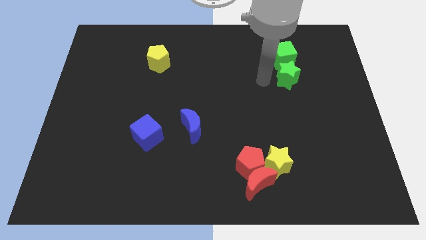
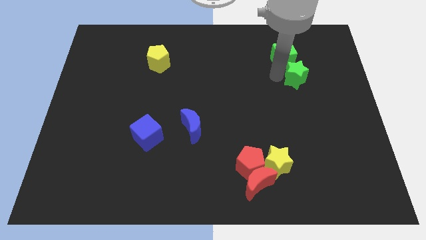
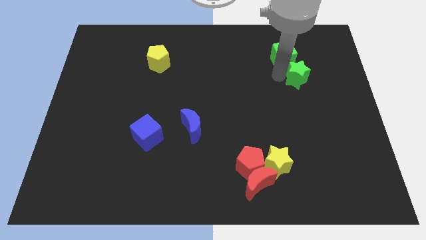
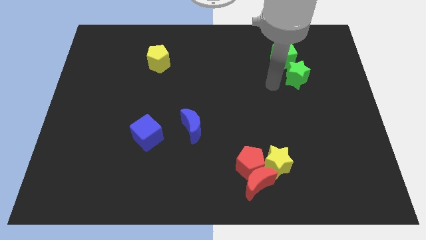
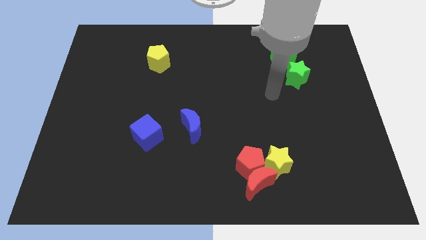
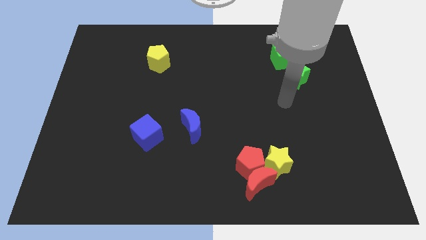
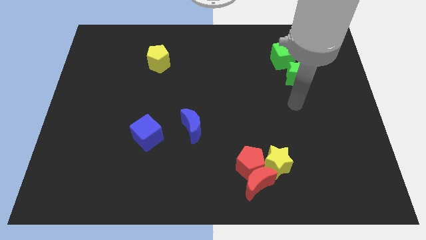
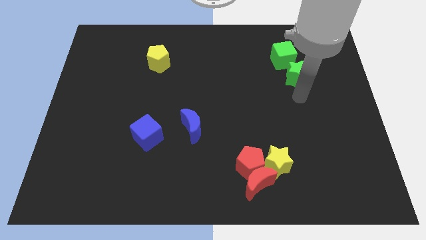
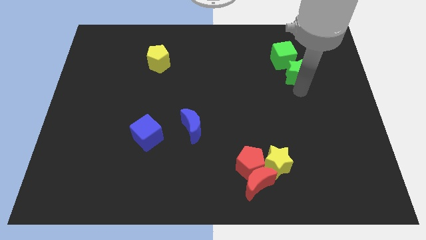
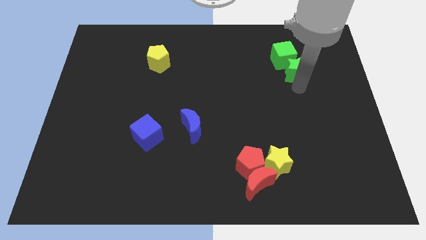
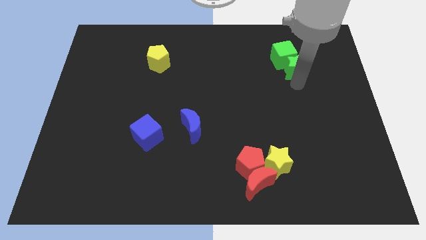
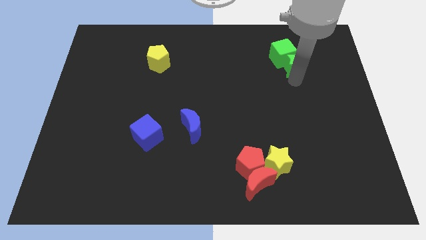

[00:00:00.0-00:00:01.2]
put the green star into the green cube

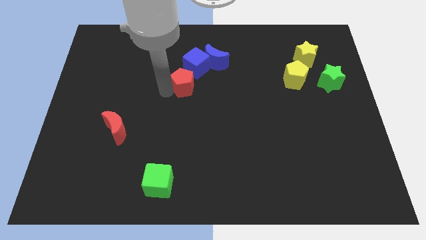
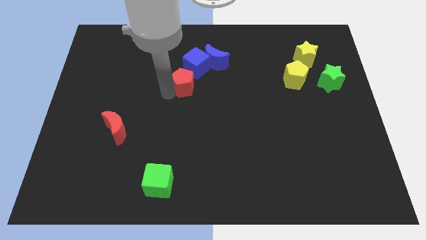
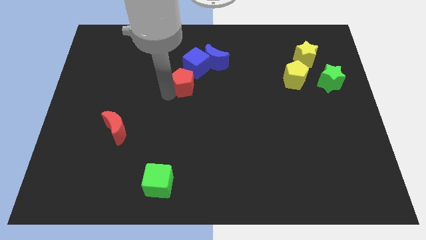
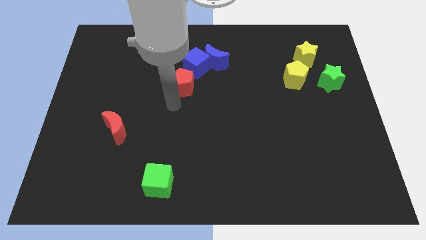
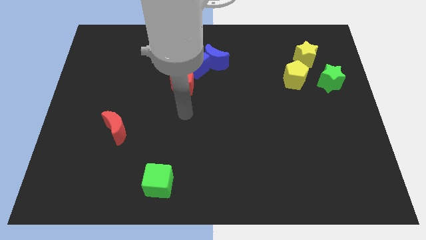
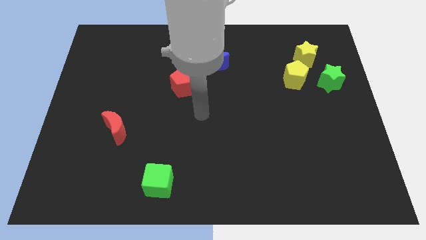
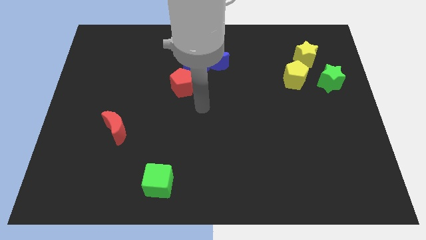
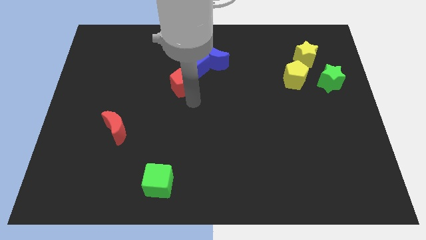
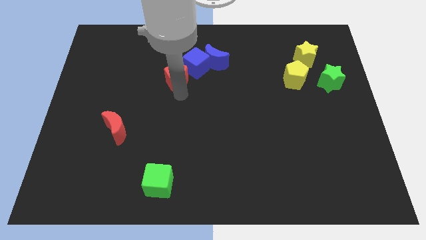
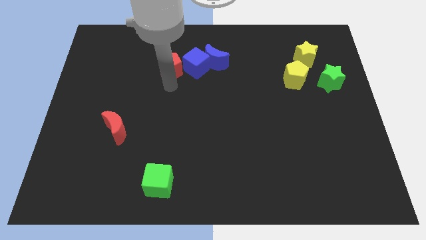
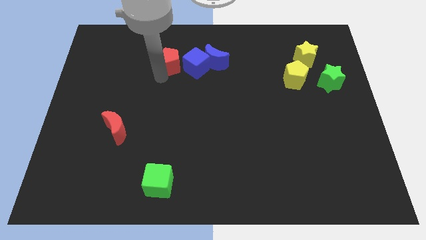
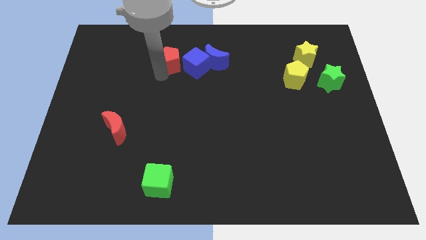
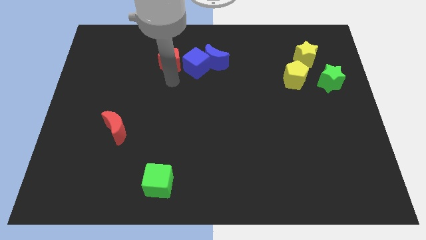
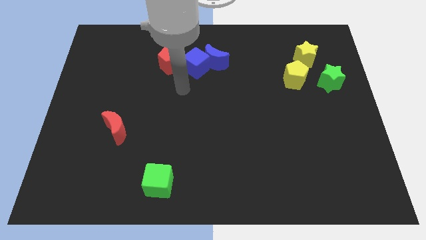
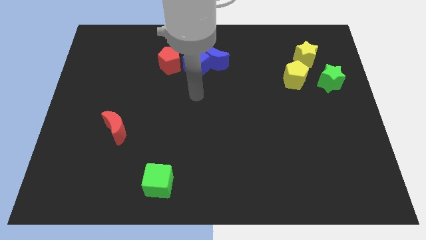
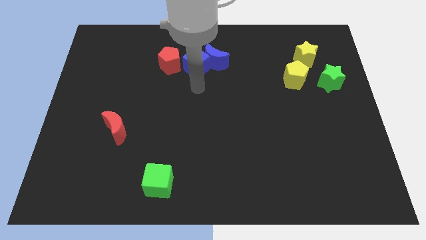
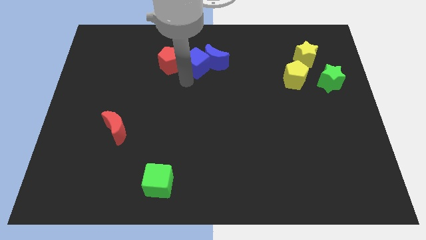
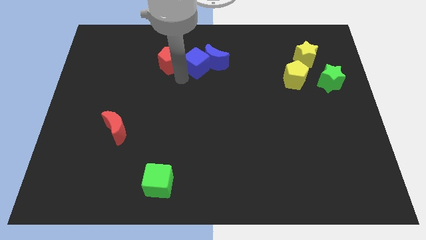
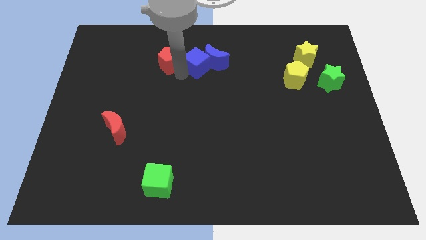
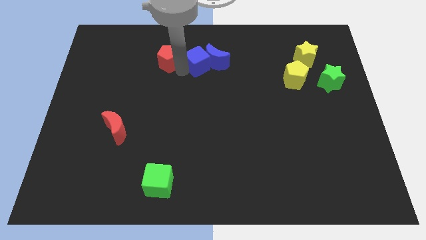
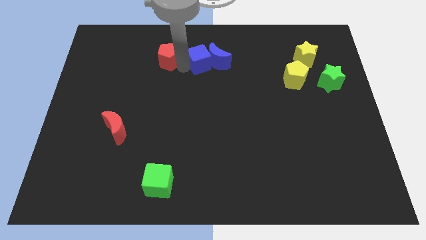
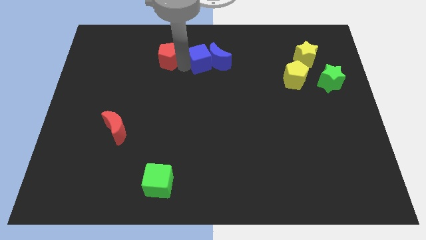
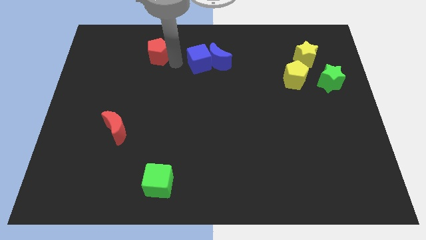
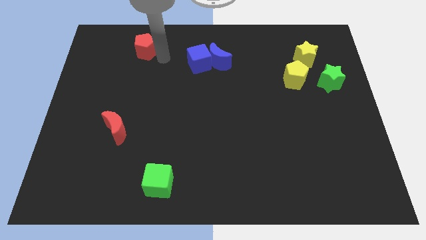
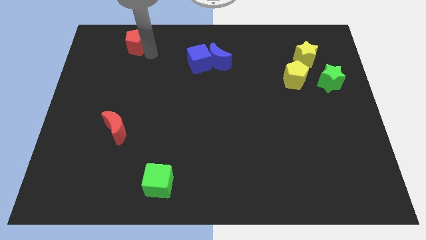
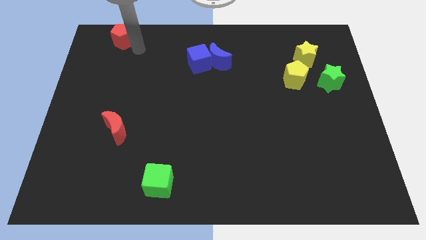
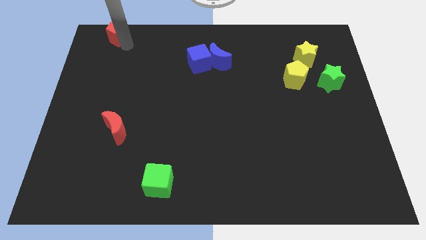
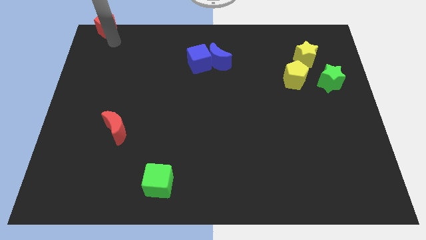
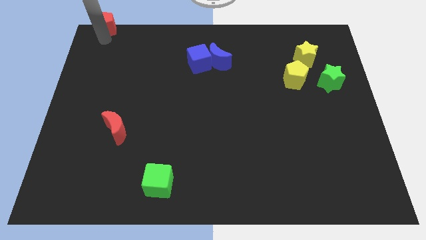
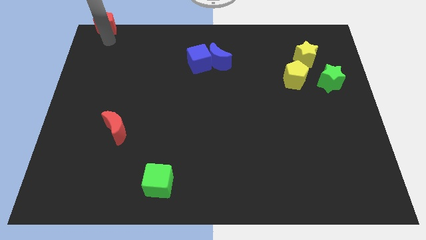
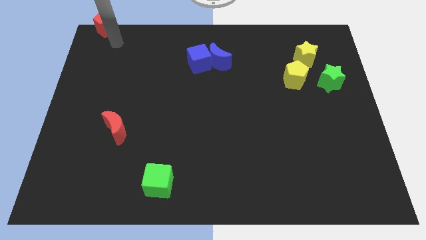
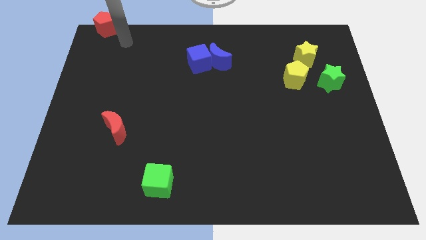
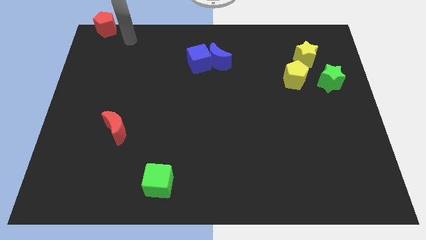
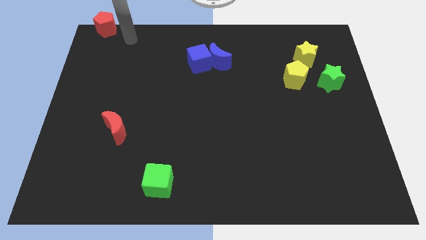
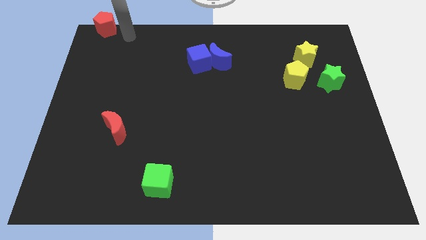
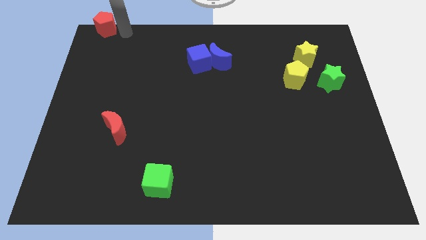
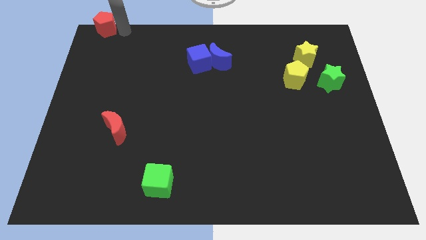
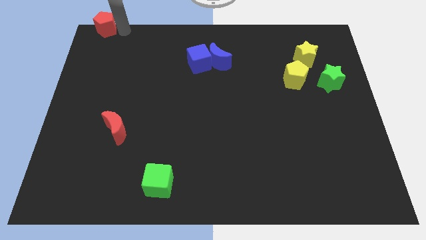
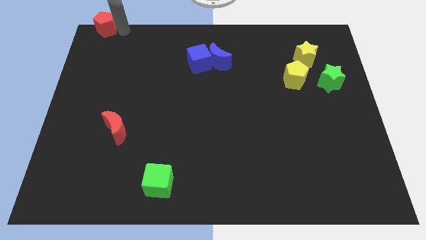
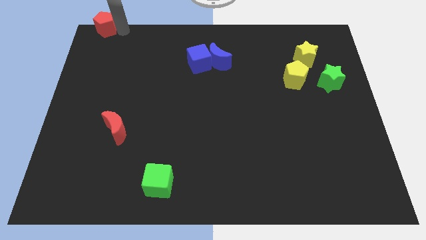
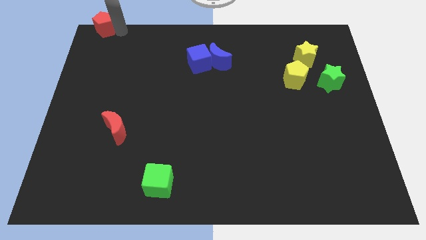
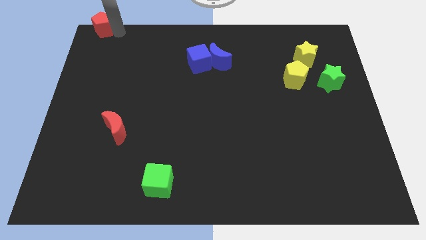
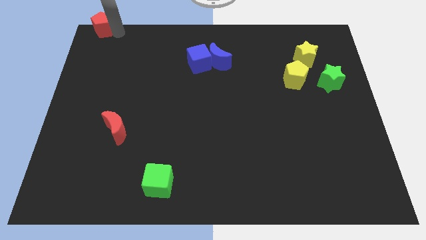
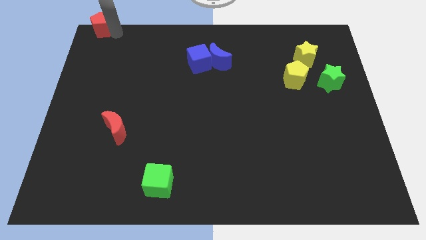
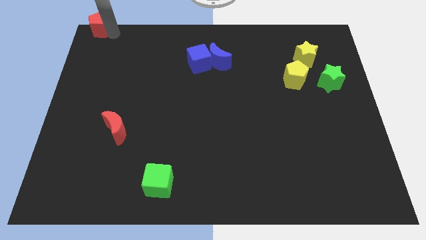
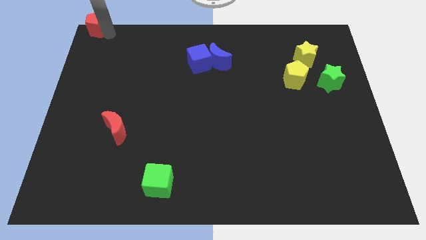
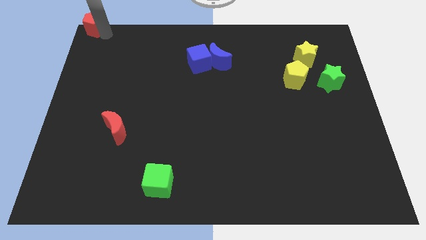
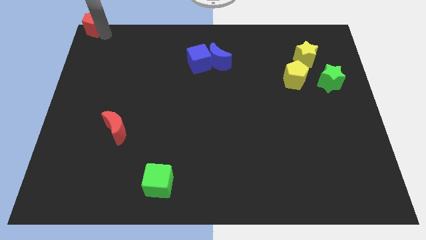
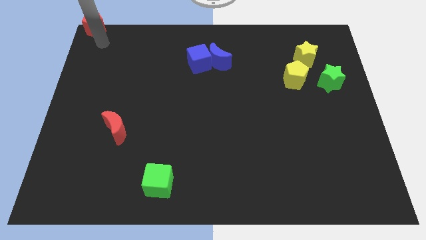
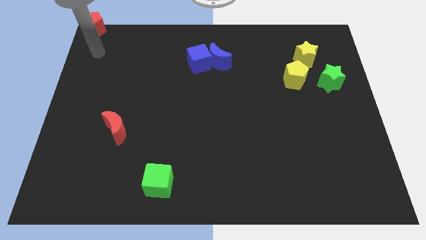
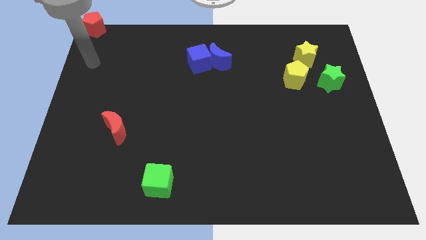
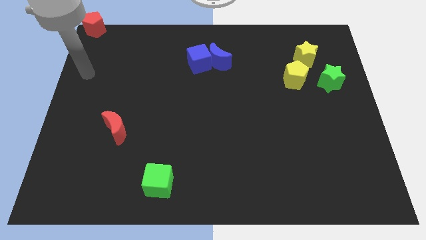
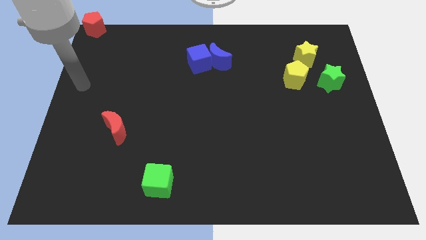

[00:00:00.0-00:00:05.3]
place the red pentagon above the red moon

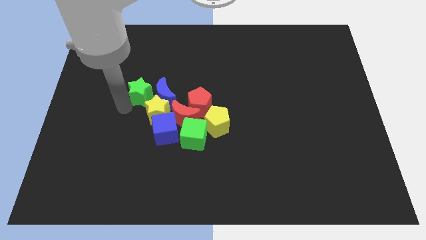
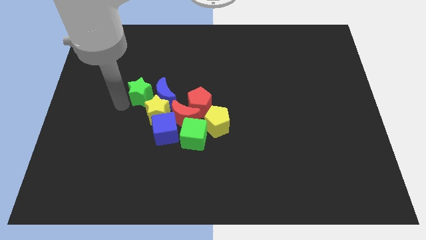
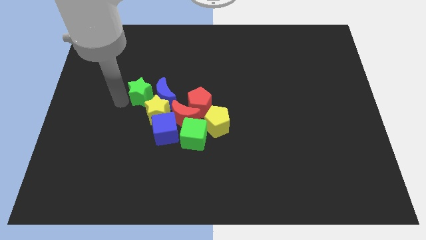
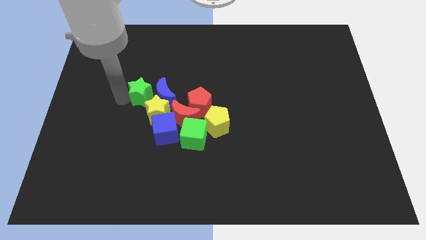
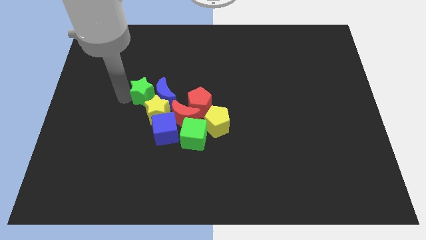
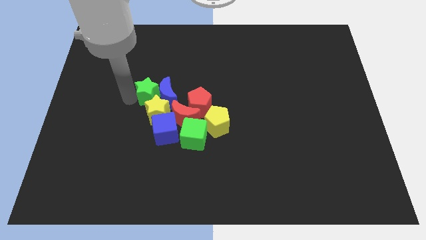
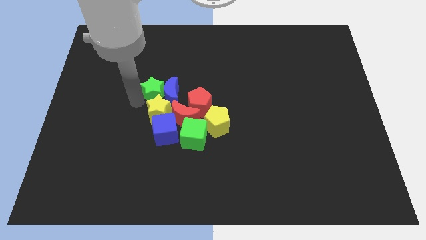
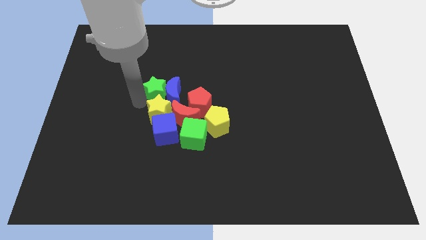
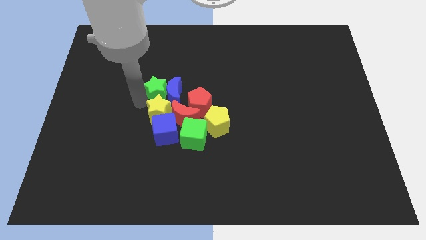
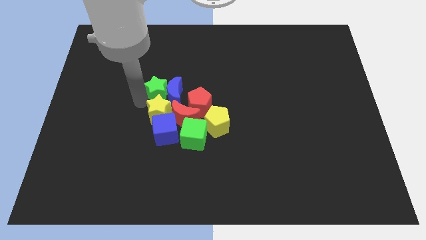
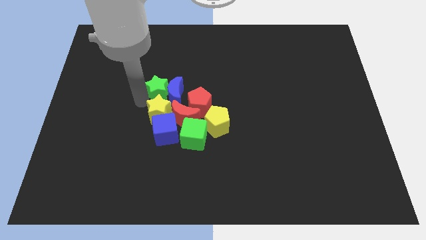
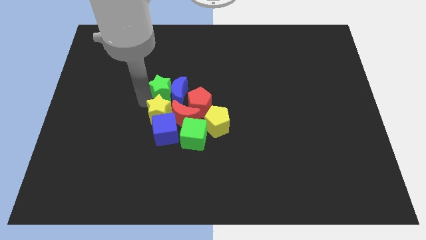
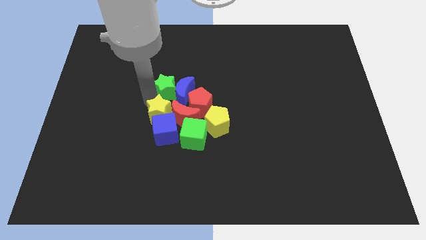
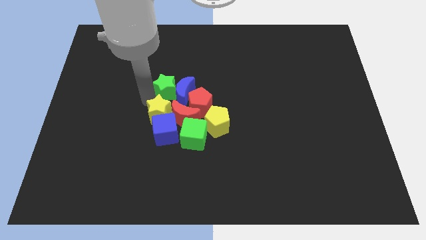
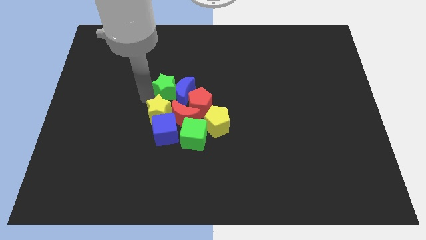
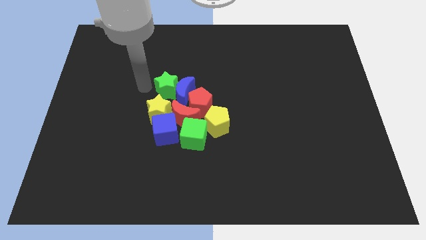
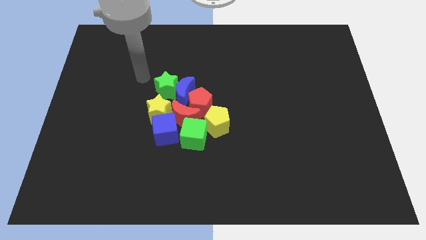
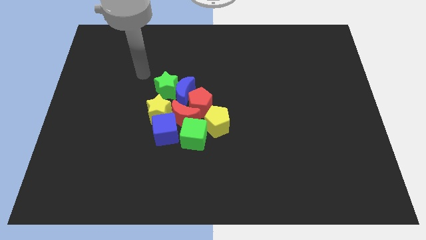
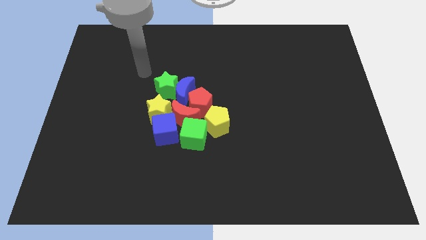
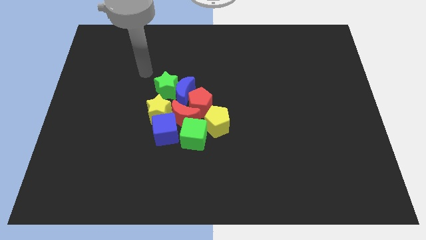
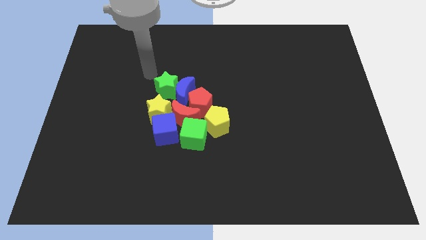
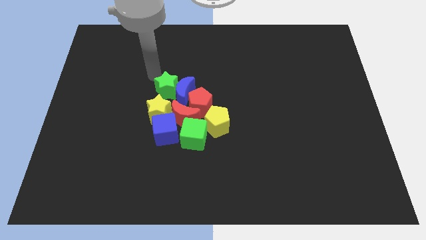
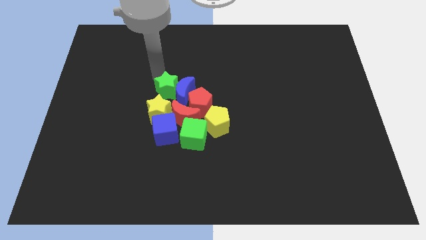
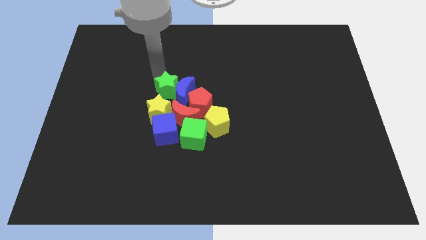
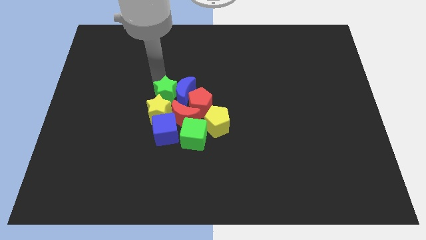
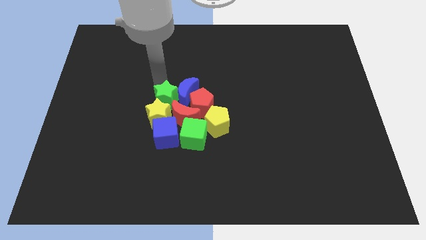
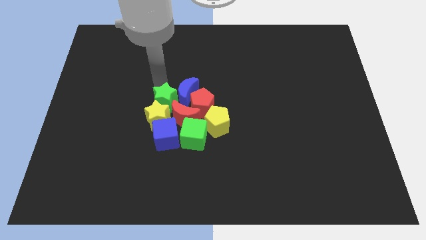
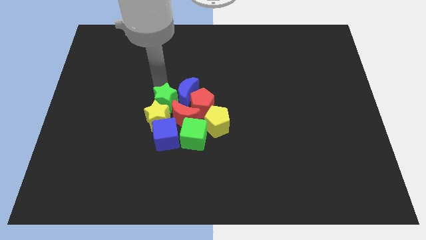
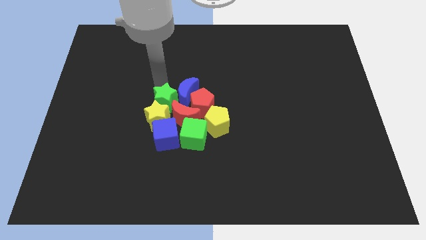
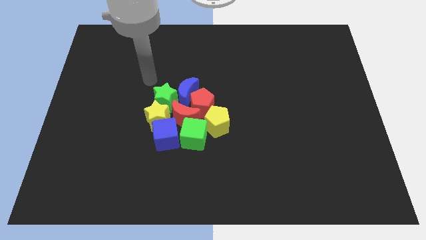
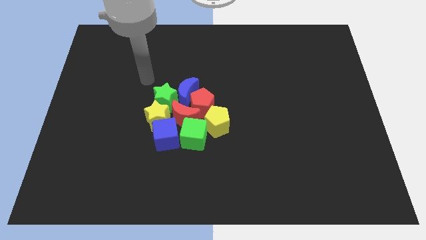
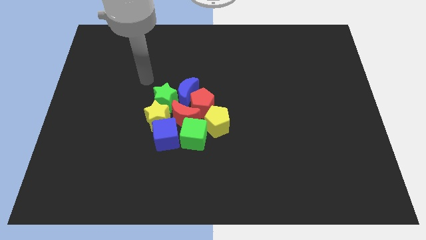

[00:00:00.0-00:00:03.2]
push the green star into the blue crescent
